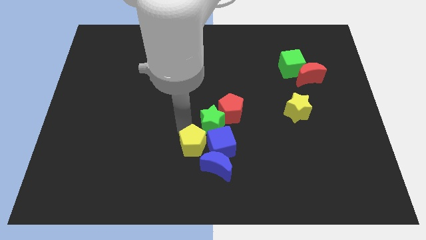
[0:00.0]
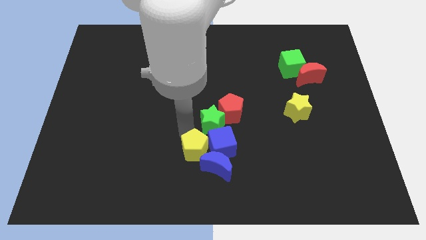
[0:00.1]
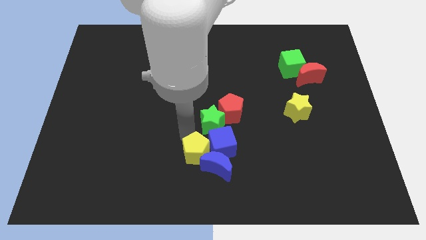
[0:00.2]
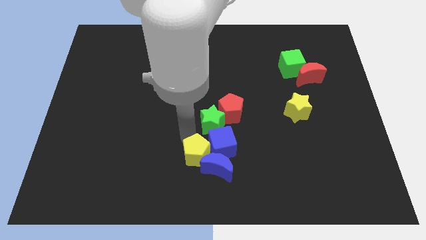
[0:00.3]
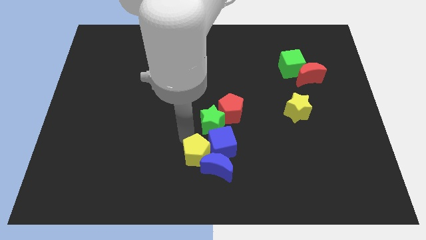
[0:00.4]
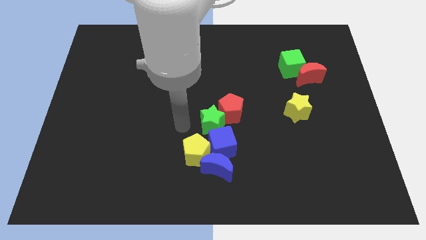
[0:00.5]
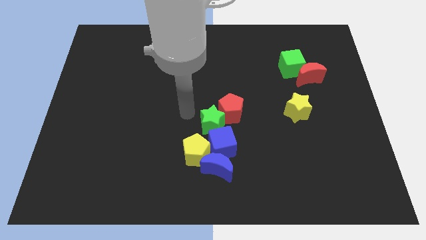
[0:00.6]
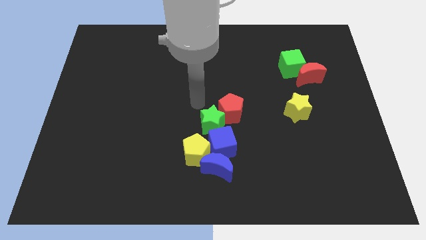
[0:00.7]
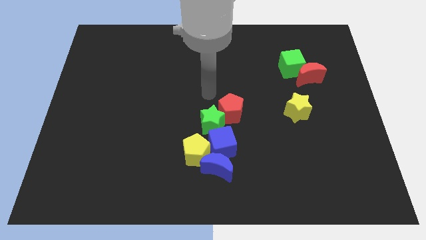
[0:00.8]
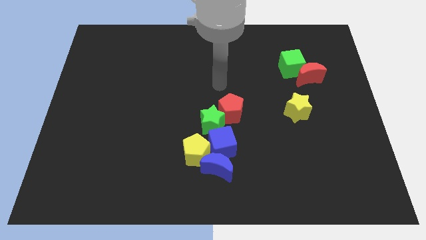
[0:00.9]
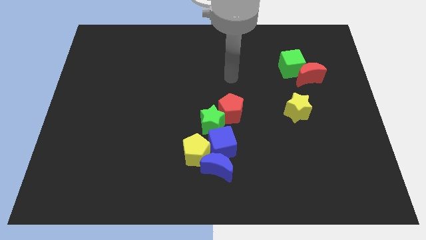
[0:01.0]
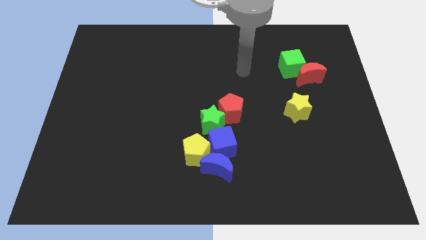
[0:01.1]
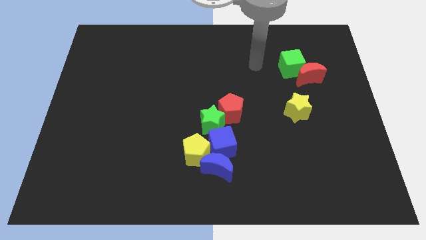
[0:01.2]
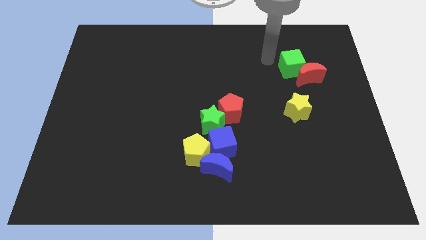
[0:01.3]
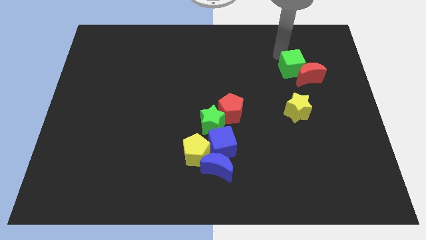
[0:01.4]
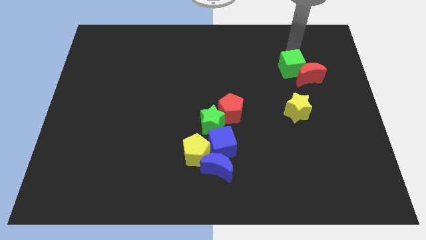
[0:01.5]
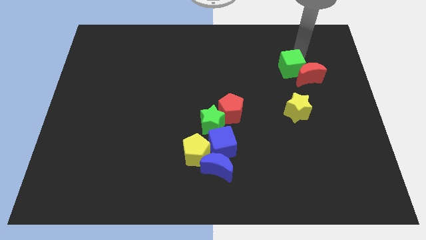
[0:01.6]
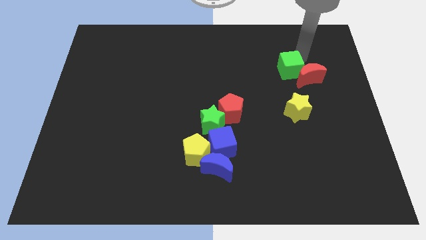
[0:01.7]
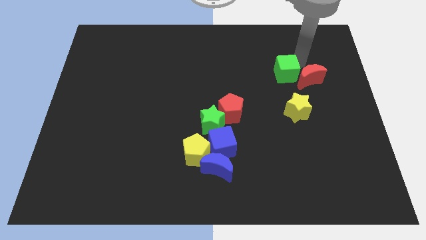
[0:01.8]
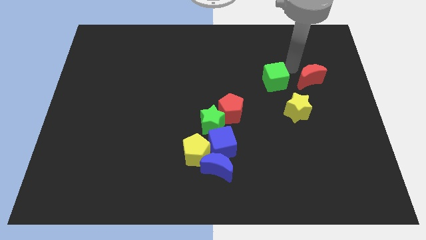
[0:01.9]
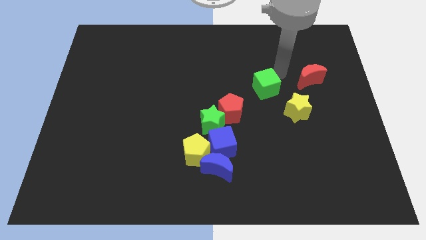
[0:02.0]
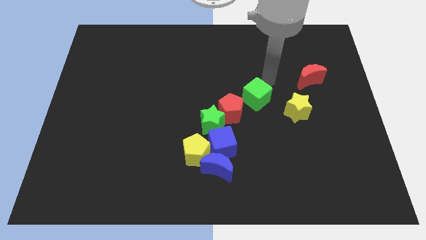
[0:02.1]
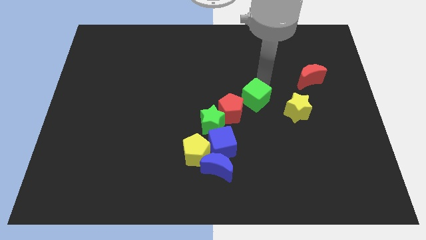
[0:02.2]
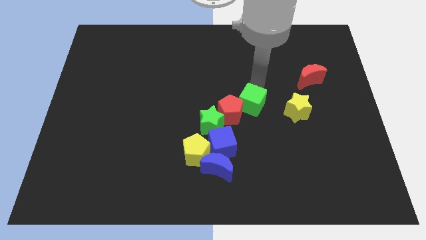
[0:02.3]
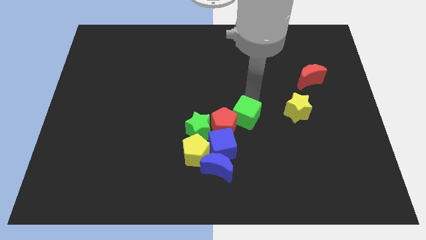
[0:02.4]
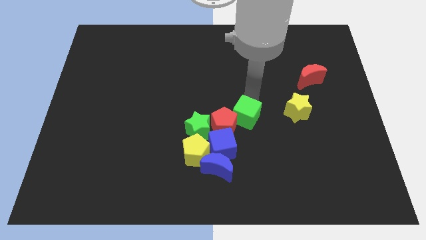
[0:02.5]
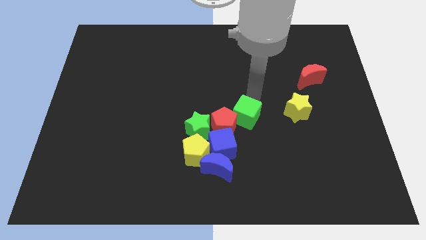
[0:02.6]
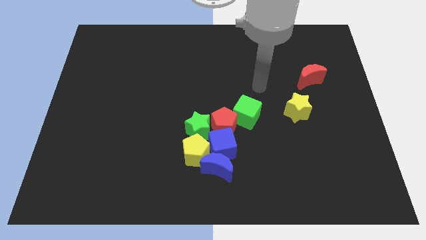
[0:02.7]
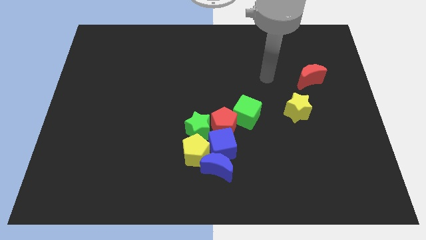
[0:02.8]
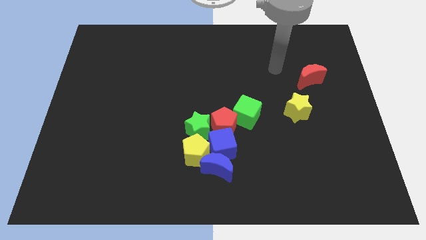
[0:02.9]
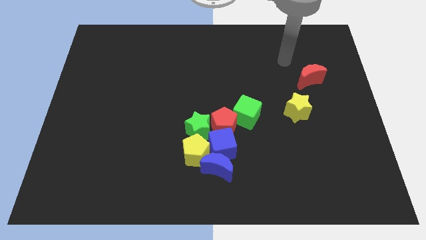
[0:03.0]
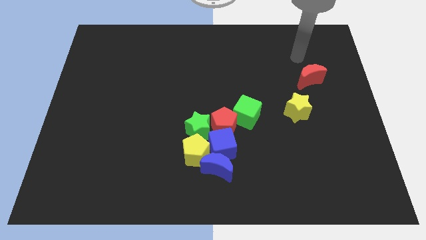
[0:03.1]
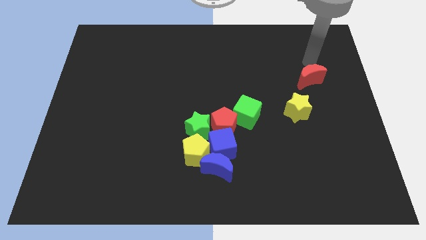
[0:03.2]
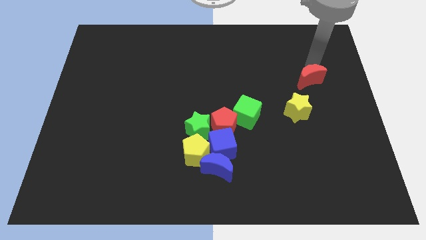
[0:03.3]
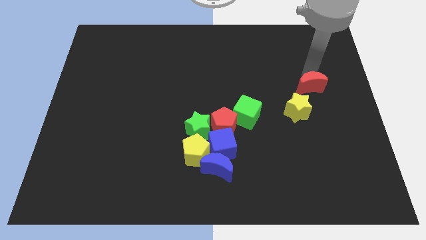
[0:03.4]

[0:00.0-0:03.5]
push the green cube into the red pentagon

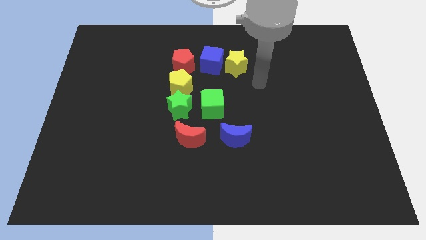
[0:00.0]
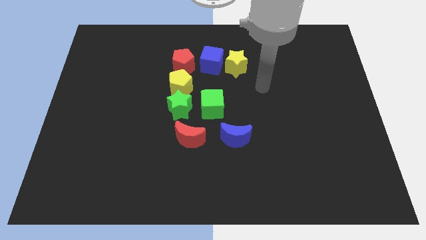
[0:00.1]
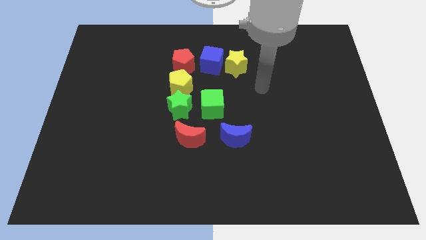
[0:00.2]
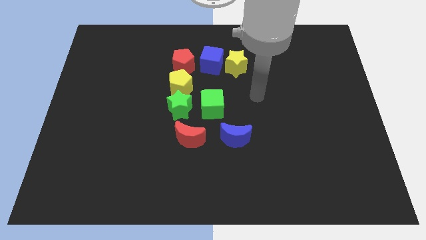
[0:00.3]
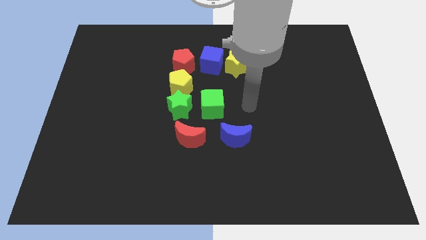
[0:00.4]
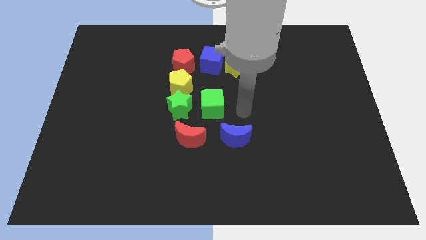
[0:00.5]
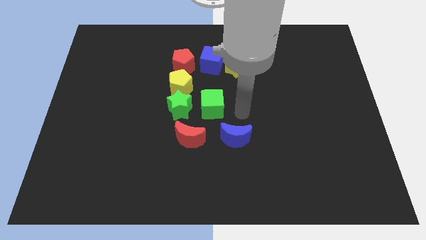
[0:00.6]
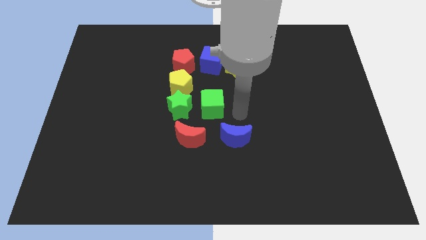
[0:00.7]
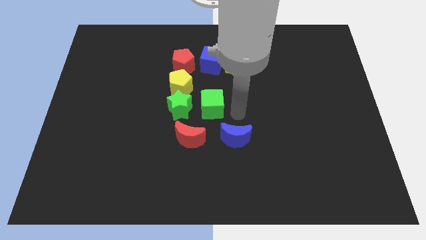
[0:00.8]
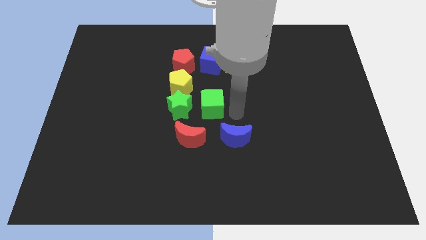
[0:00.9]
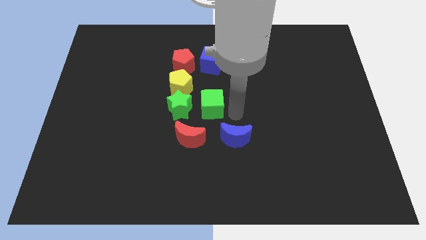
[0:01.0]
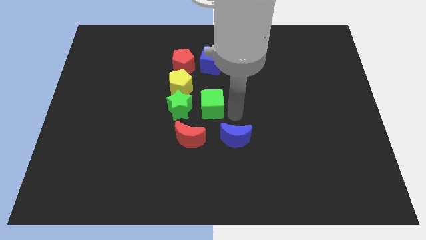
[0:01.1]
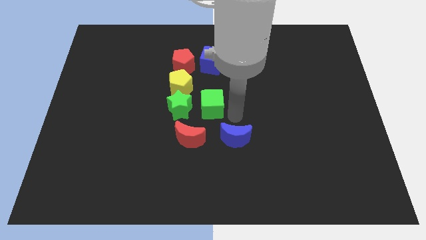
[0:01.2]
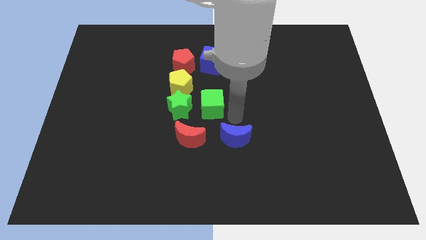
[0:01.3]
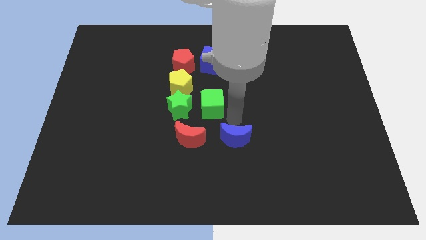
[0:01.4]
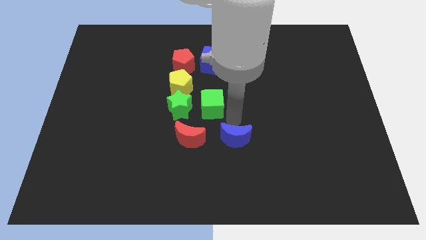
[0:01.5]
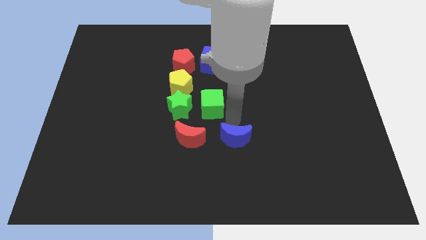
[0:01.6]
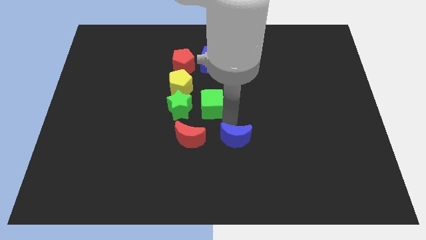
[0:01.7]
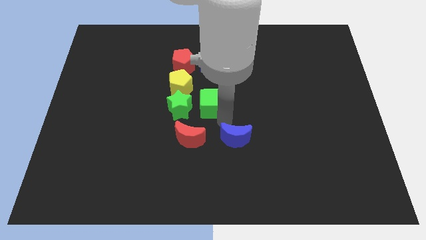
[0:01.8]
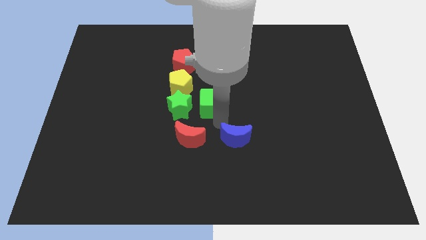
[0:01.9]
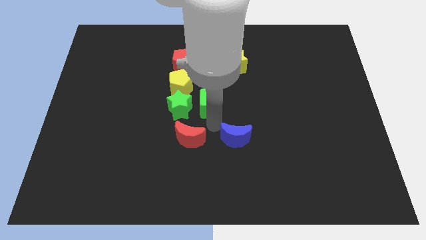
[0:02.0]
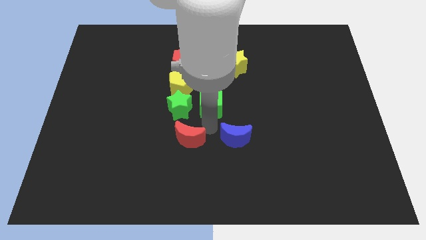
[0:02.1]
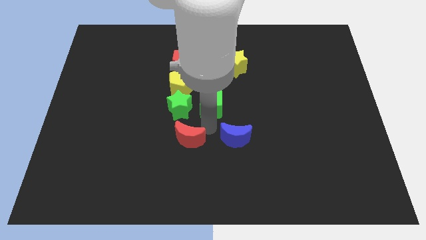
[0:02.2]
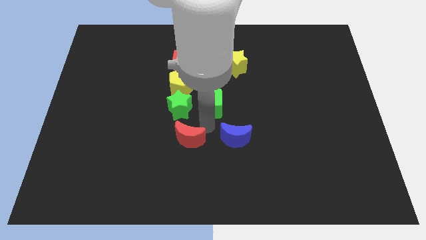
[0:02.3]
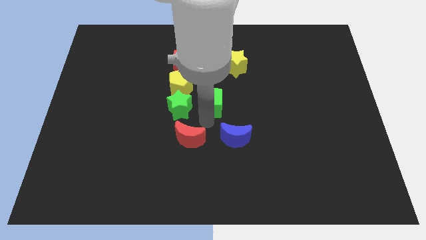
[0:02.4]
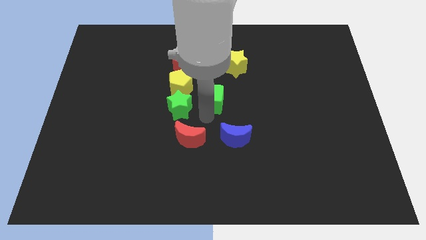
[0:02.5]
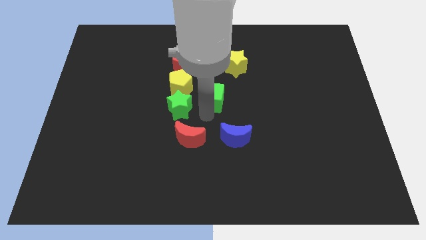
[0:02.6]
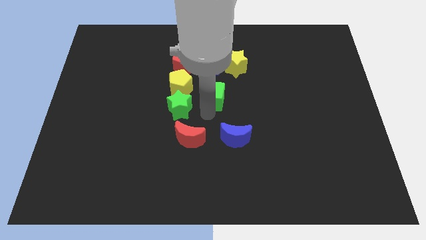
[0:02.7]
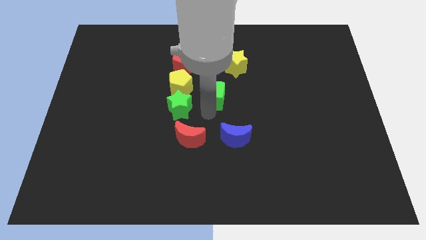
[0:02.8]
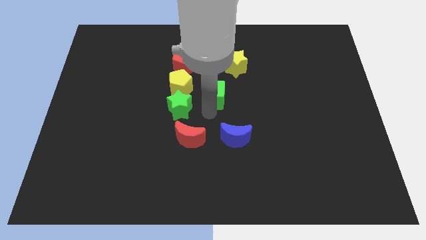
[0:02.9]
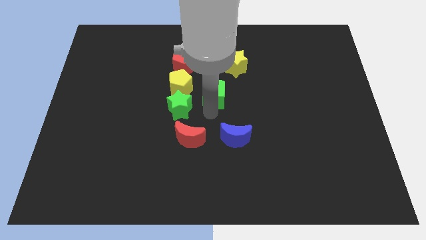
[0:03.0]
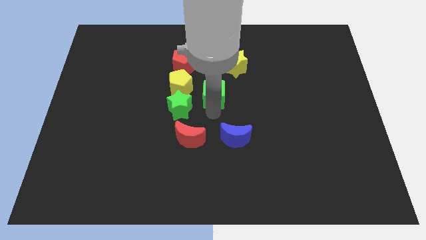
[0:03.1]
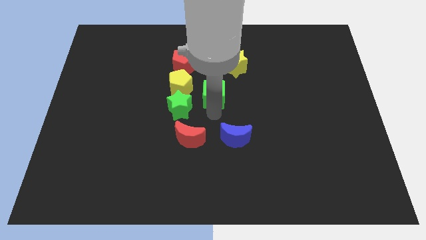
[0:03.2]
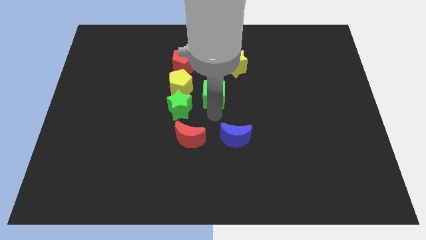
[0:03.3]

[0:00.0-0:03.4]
push the green cube to the right of green star and yellow pentagon

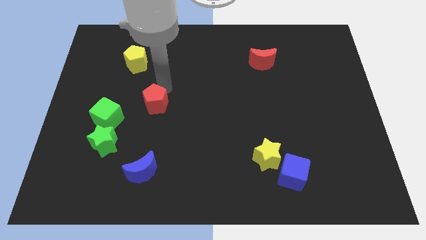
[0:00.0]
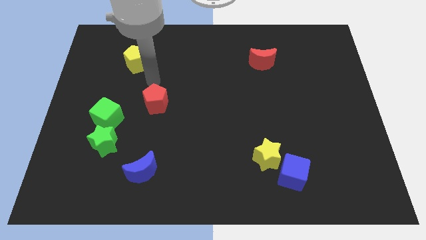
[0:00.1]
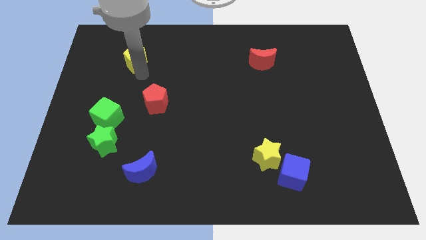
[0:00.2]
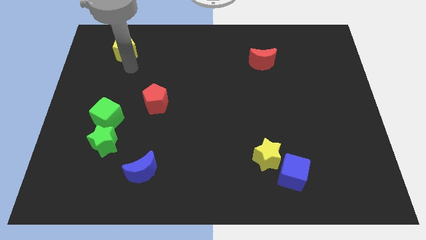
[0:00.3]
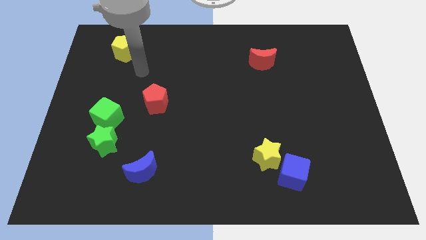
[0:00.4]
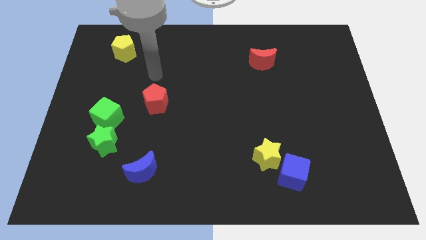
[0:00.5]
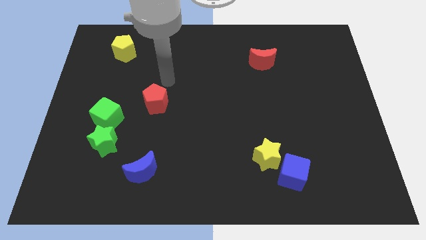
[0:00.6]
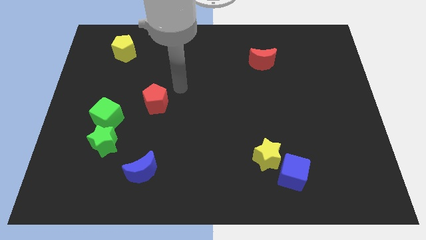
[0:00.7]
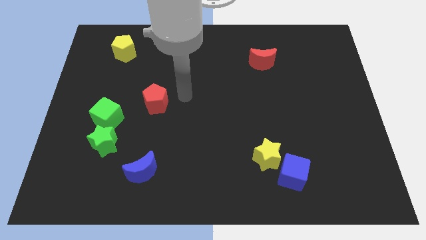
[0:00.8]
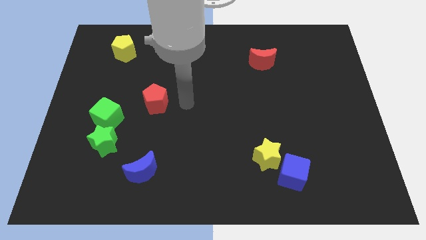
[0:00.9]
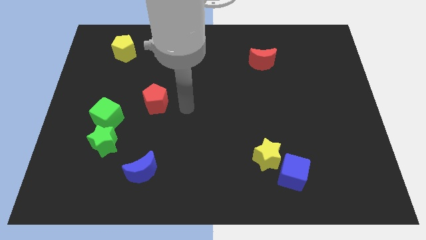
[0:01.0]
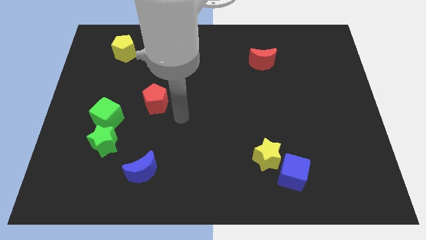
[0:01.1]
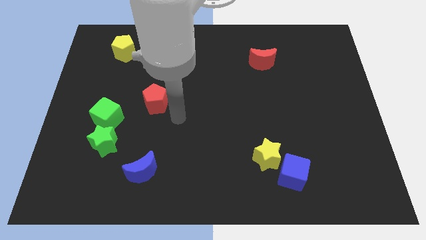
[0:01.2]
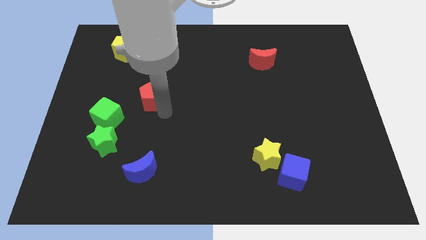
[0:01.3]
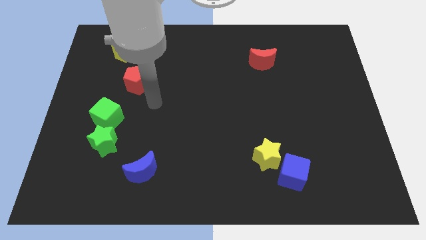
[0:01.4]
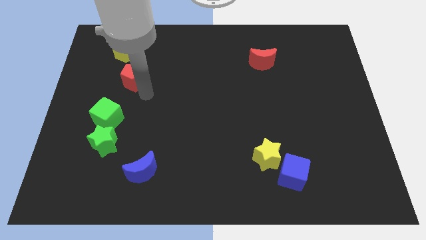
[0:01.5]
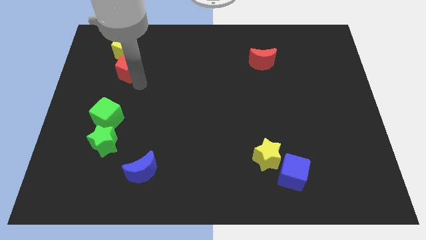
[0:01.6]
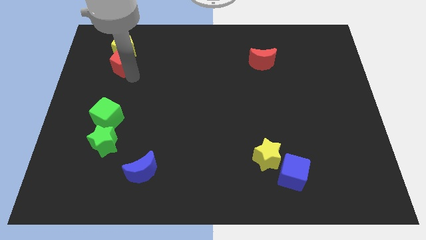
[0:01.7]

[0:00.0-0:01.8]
push the yellow and red pentagon up slightly

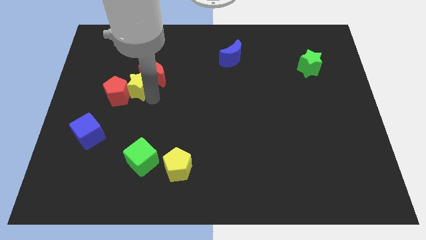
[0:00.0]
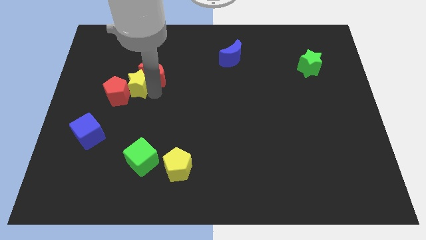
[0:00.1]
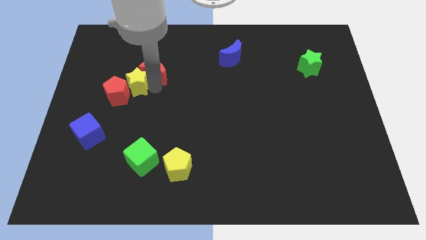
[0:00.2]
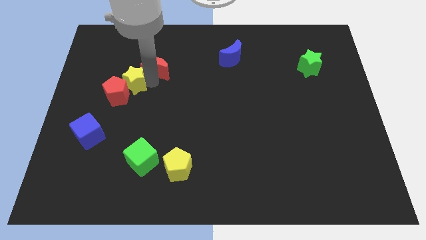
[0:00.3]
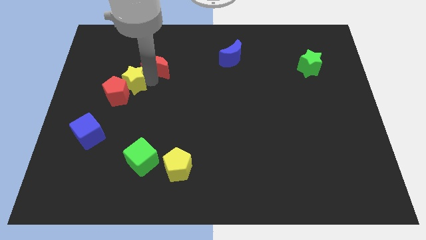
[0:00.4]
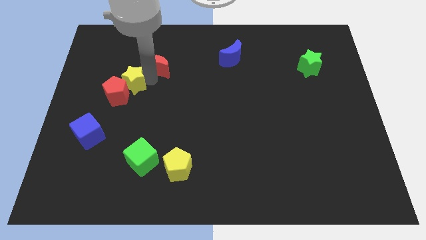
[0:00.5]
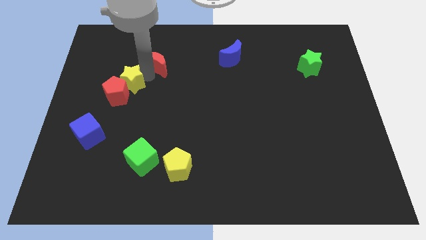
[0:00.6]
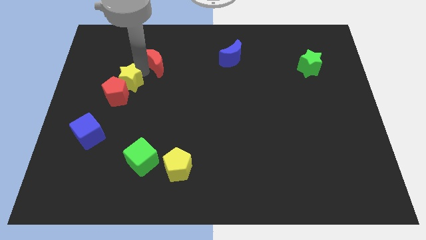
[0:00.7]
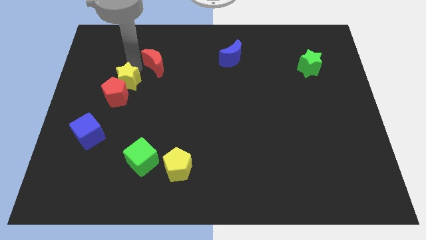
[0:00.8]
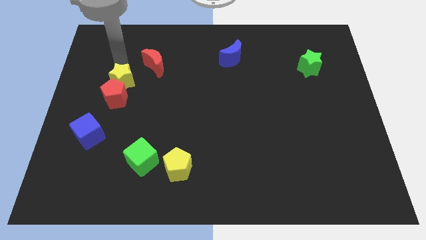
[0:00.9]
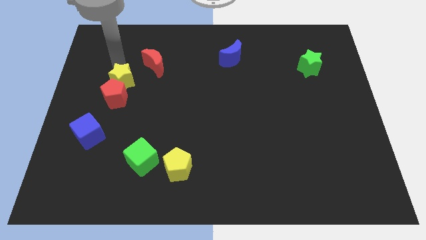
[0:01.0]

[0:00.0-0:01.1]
place the yellow star above the red pentagon
